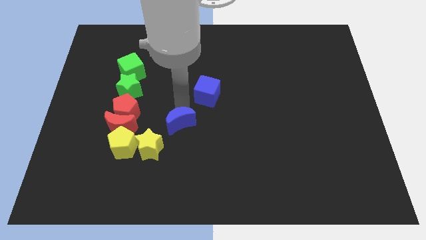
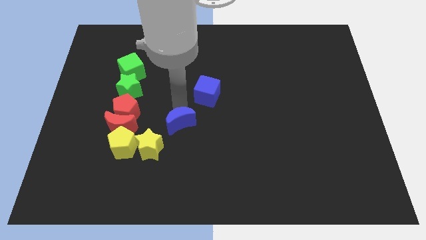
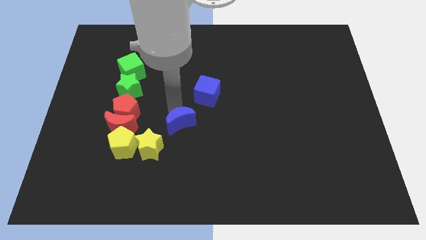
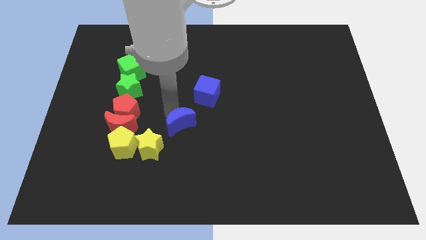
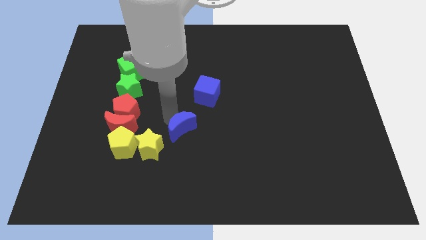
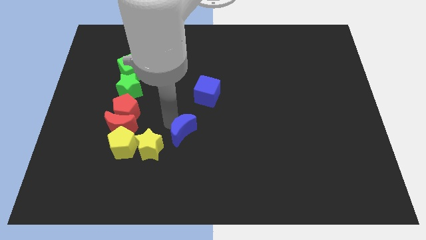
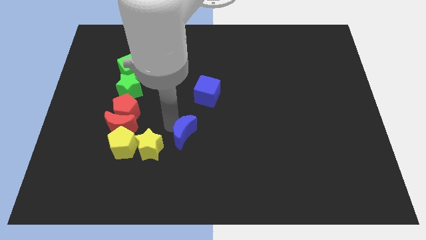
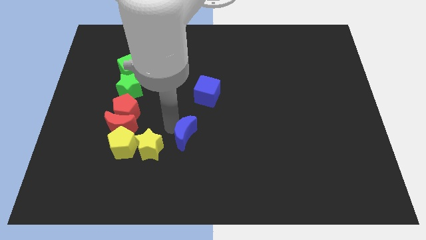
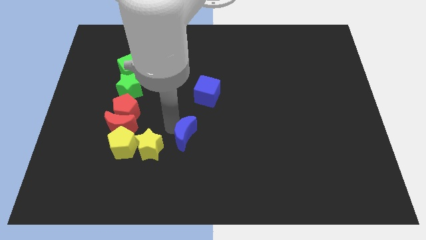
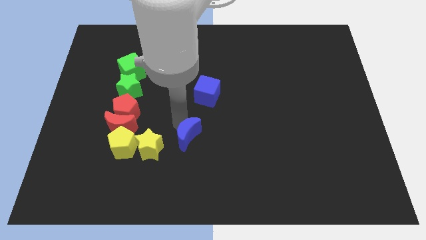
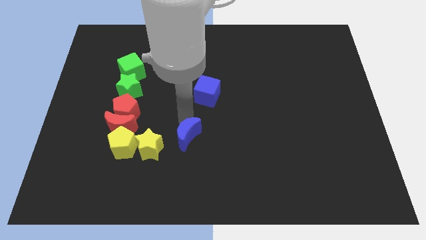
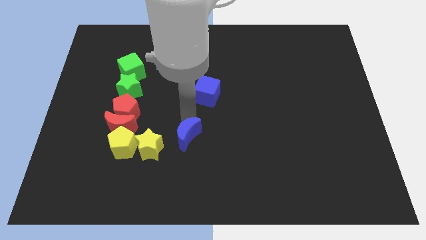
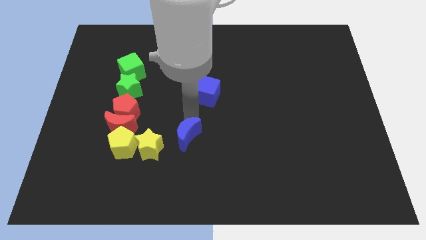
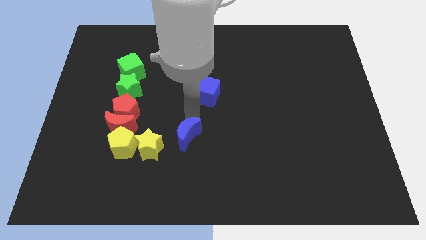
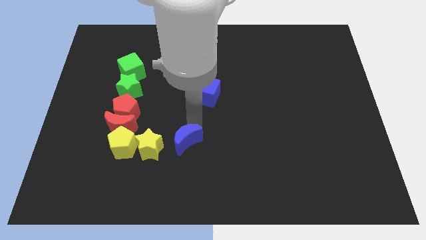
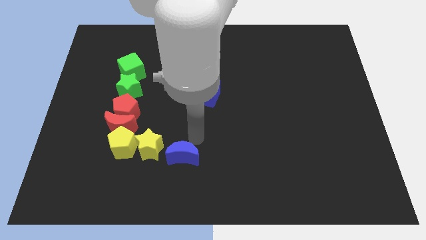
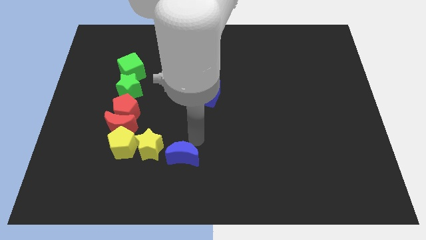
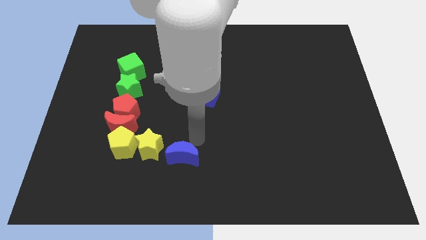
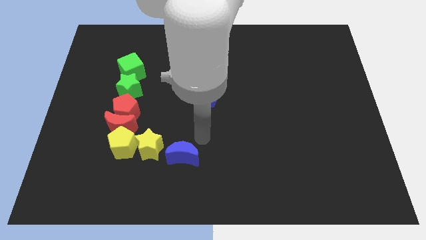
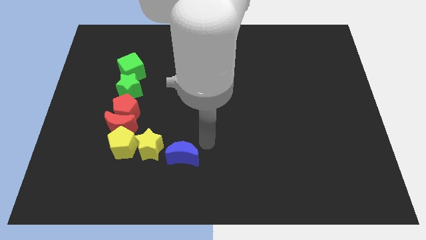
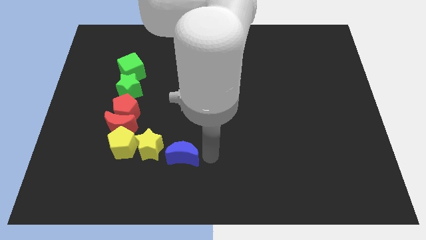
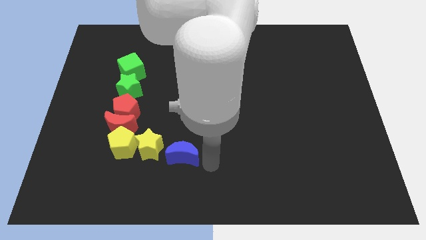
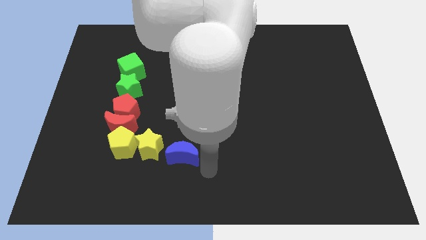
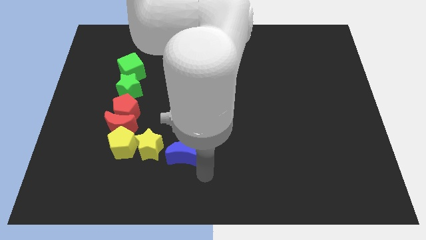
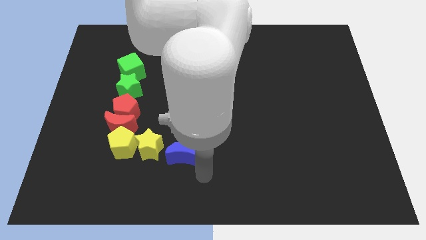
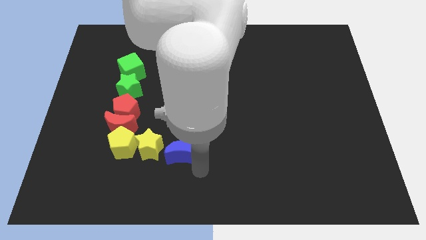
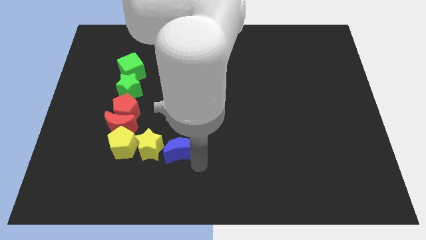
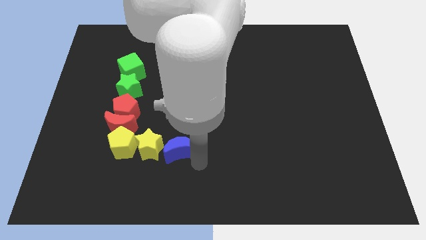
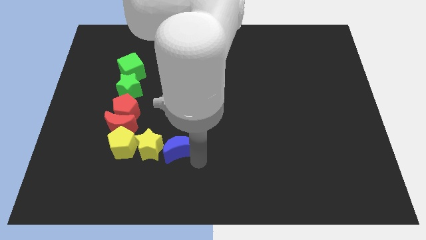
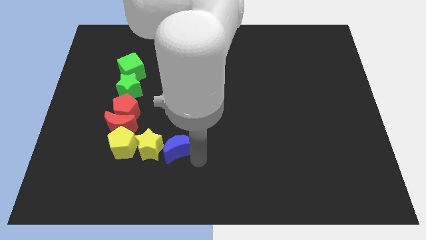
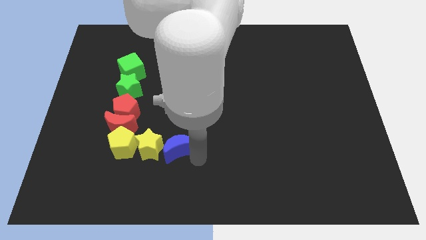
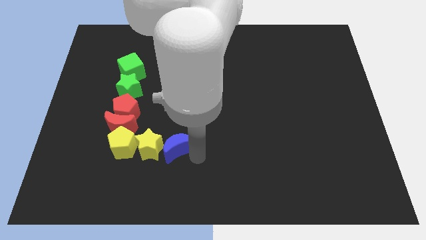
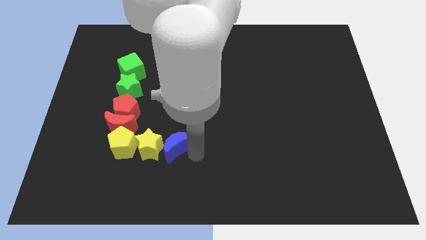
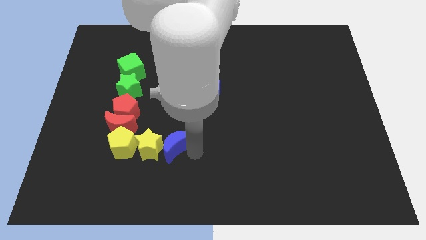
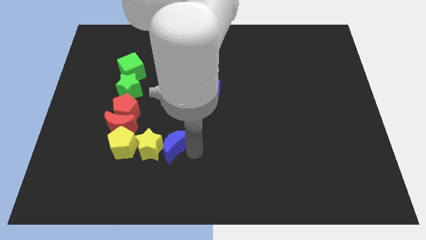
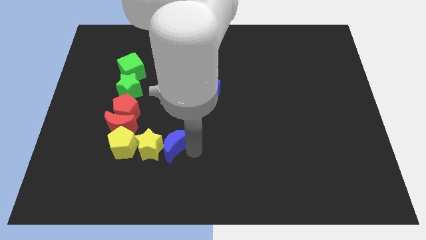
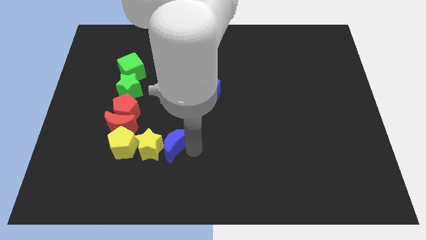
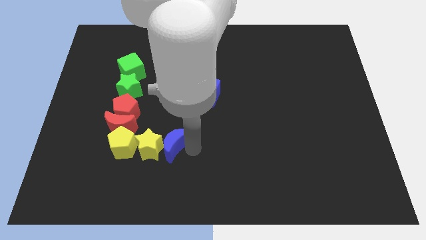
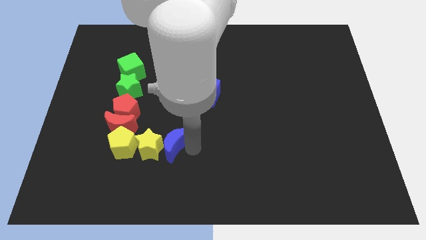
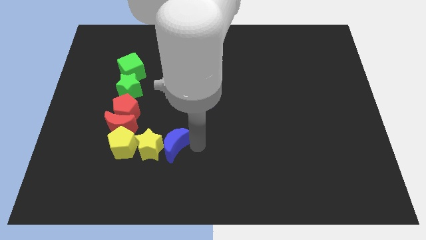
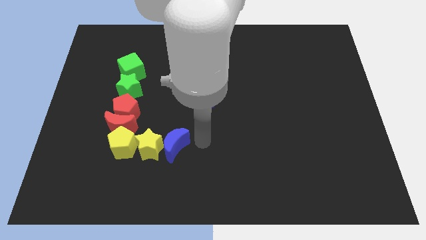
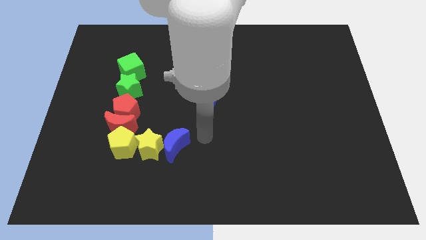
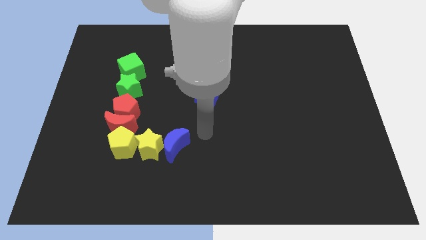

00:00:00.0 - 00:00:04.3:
place blue moon vertically

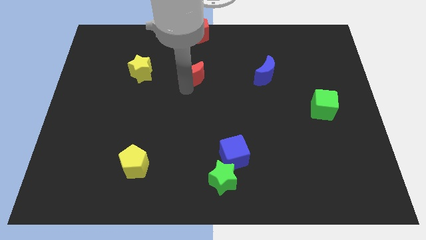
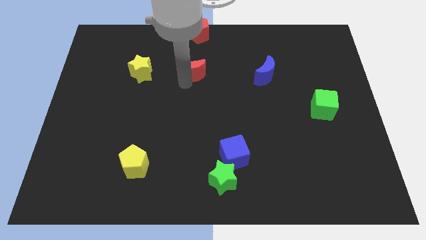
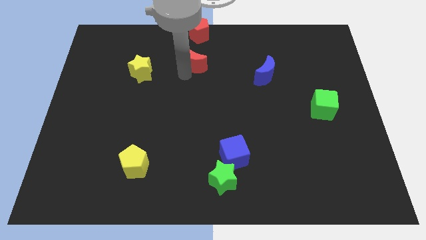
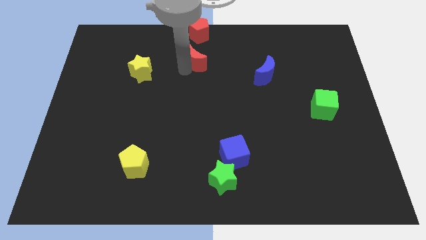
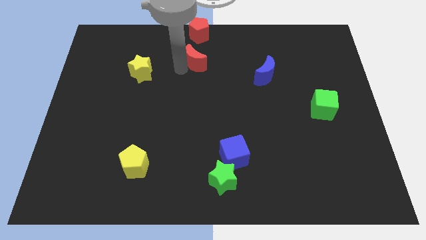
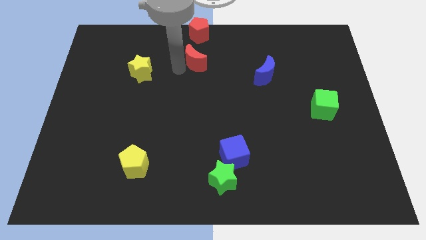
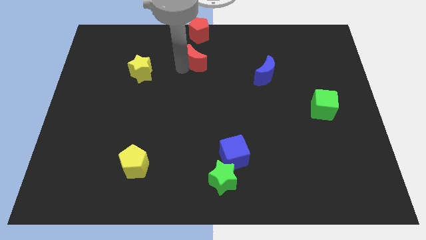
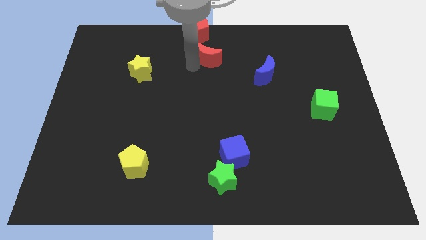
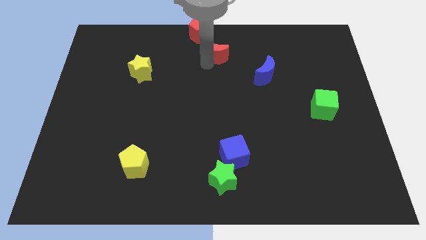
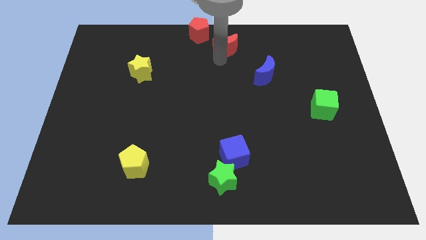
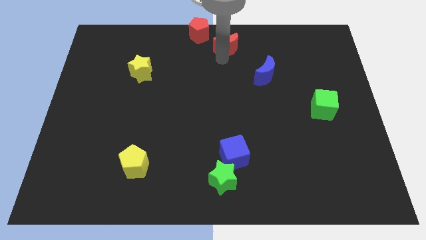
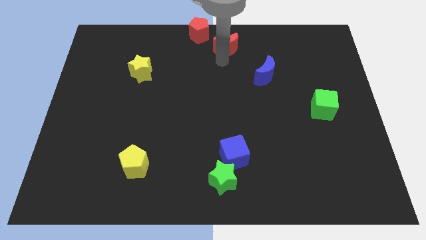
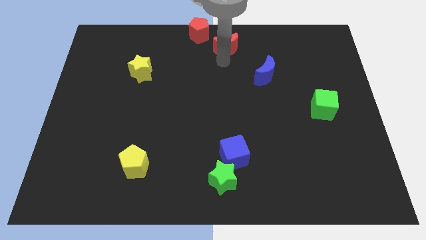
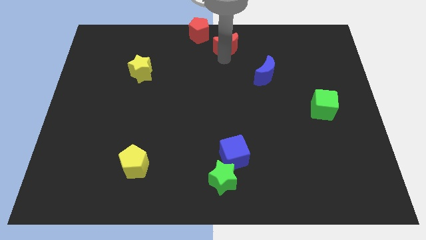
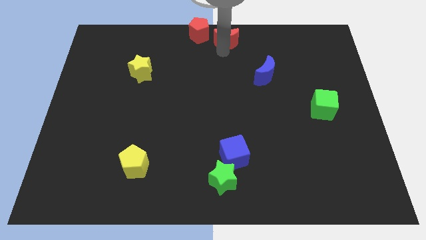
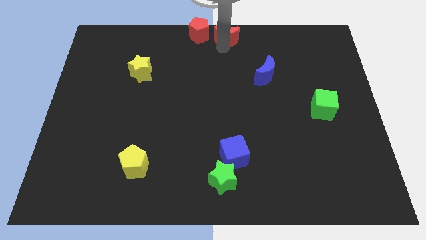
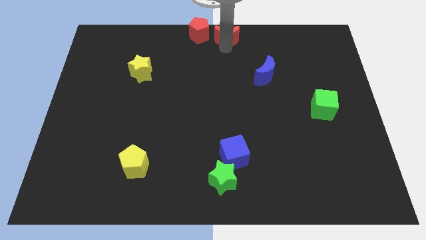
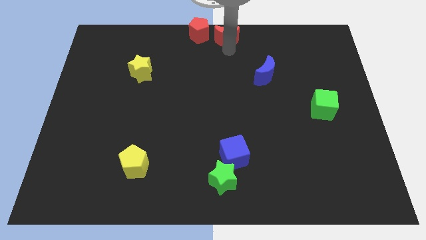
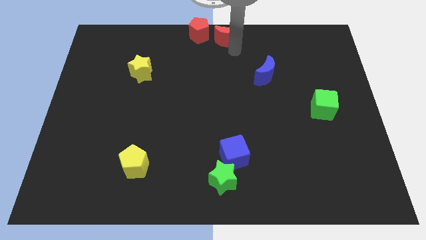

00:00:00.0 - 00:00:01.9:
place the red moon right to the red pentagon

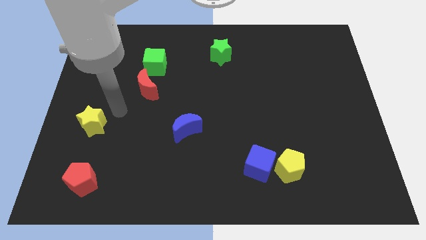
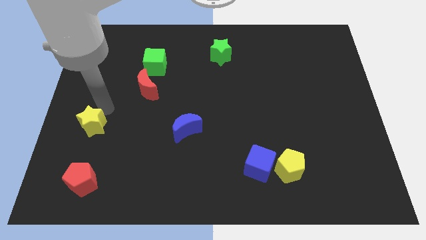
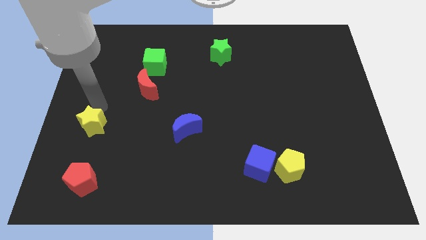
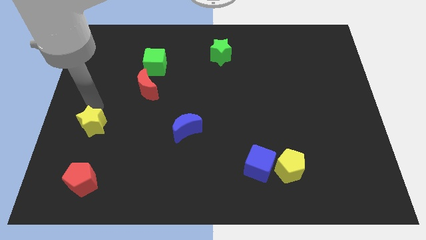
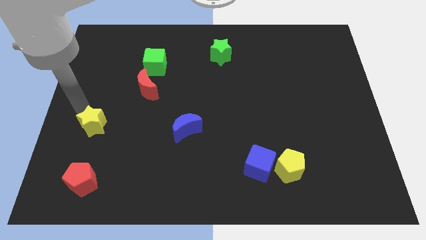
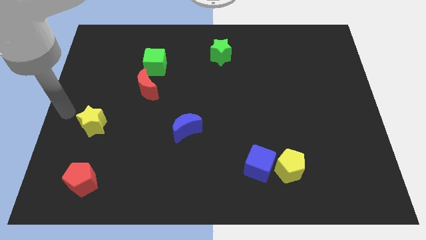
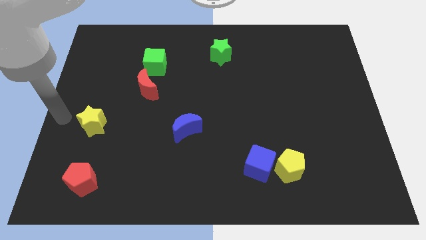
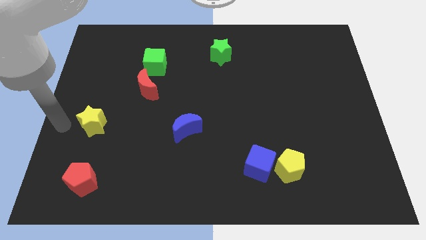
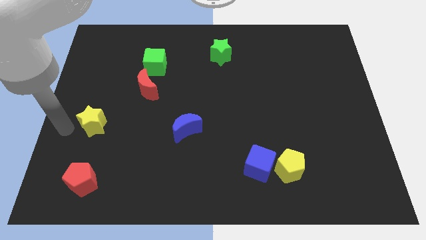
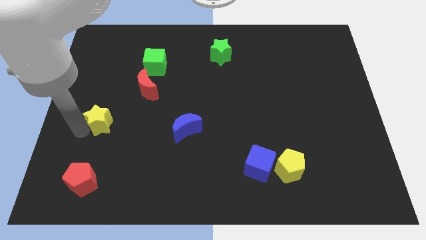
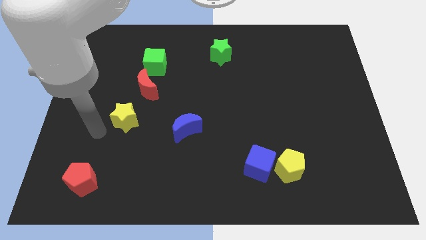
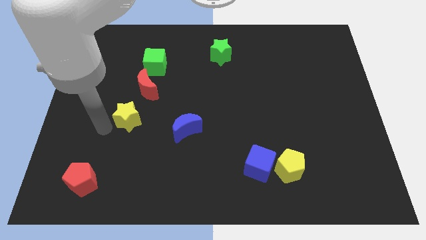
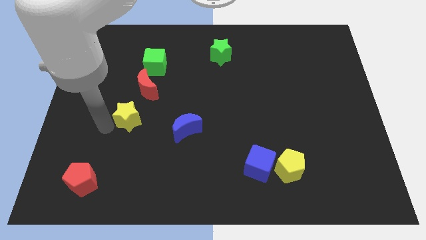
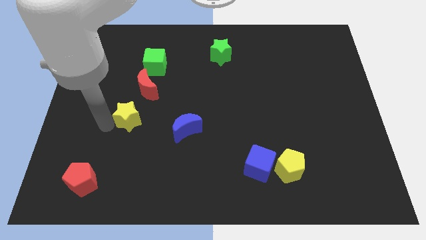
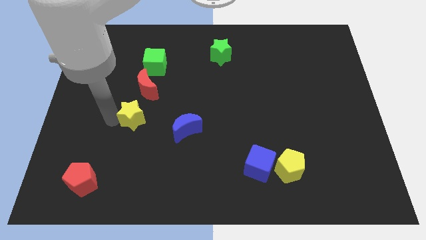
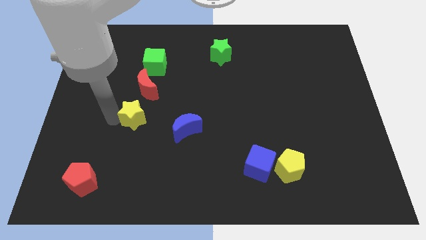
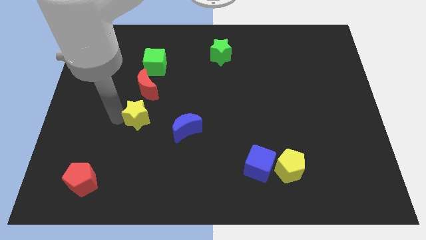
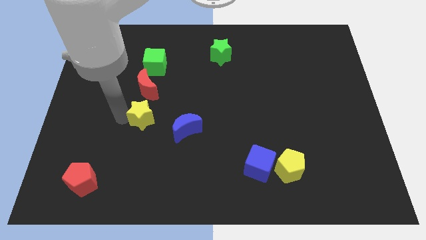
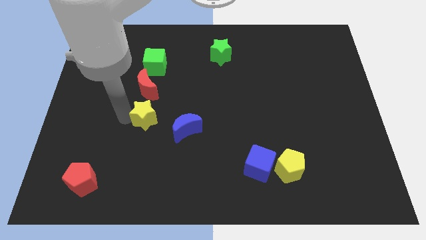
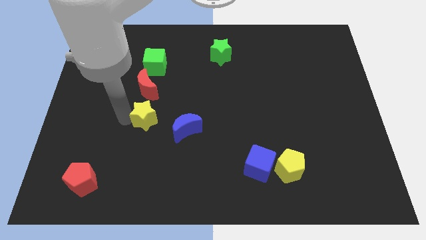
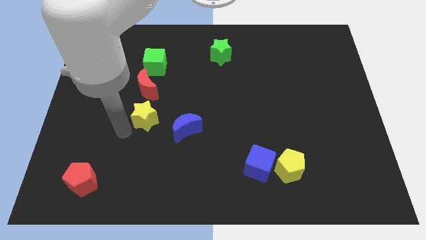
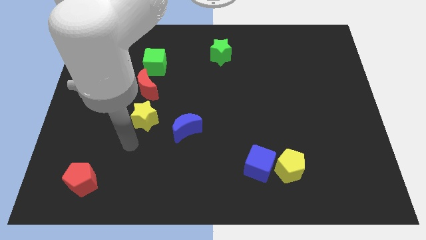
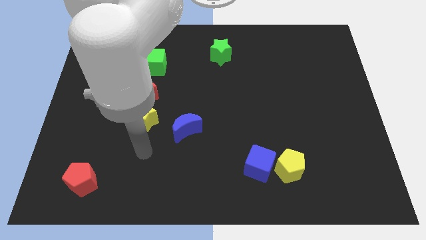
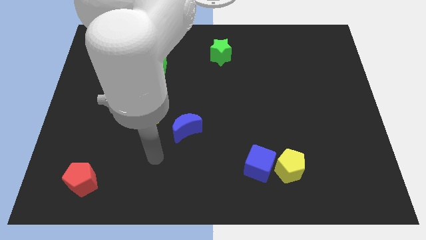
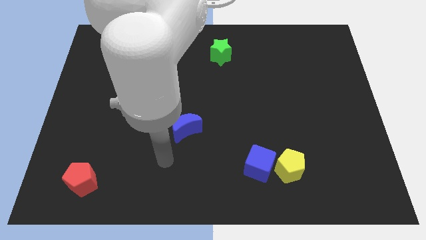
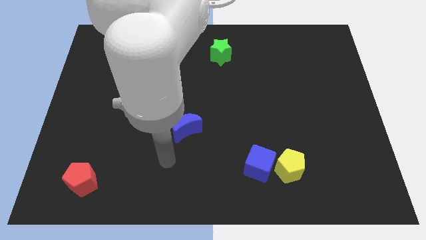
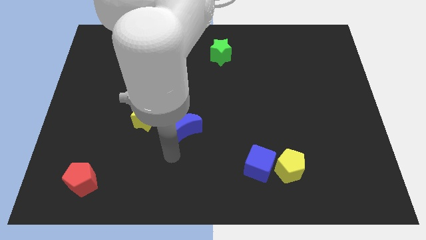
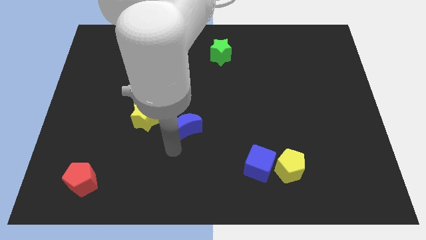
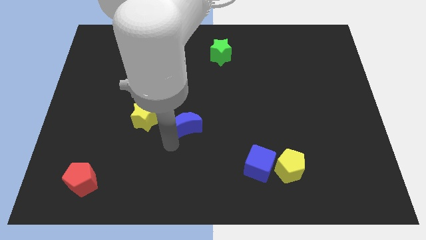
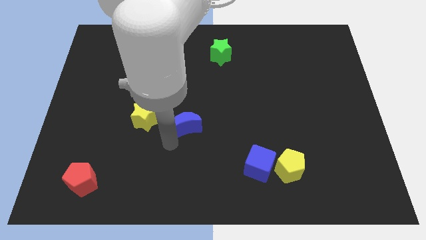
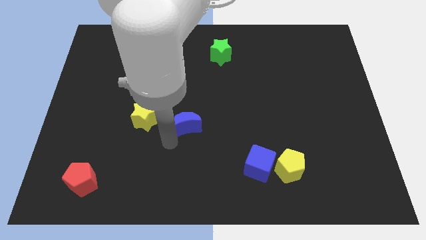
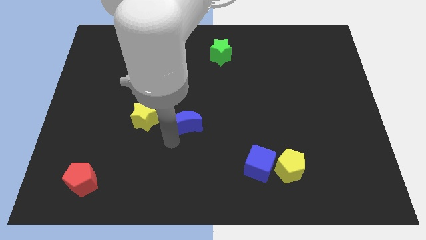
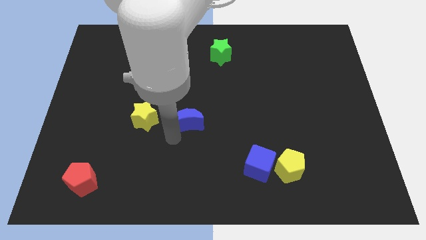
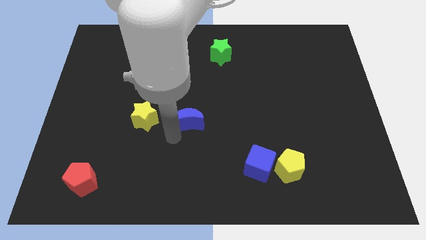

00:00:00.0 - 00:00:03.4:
place the yellow star below the red moon
